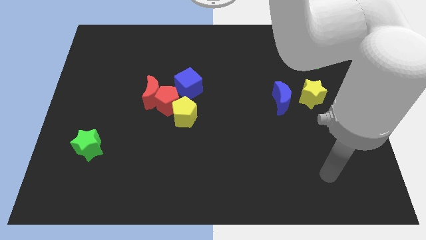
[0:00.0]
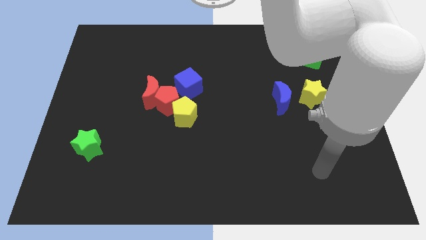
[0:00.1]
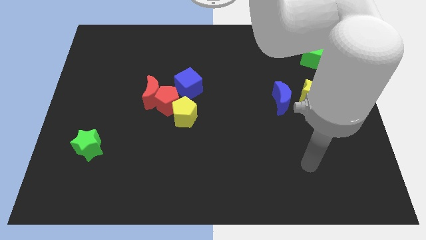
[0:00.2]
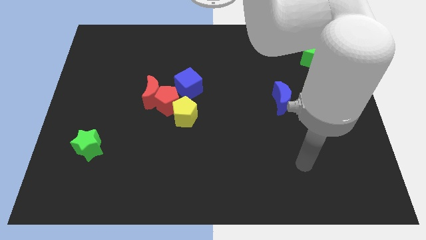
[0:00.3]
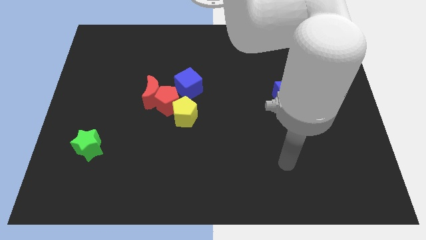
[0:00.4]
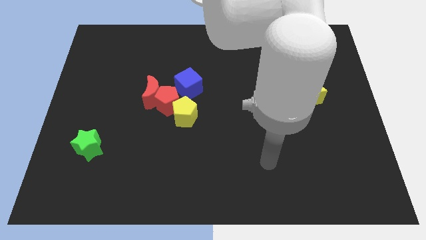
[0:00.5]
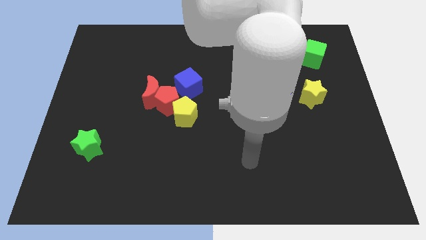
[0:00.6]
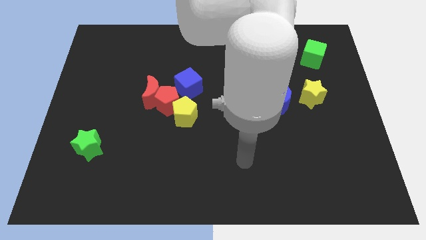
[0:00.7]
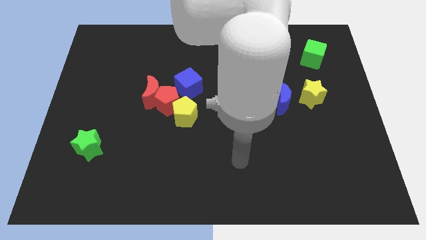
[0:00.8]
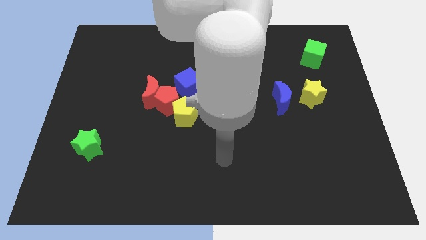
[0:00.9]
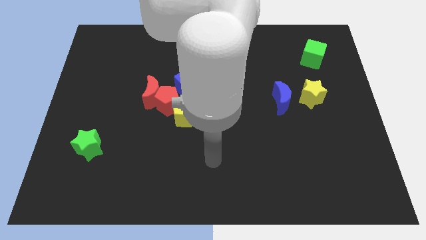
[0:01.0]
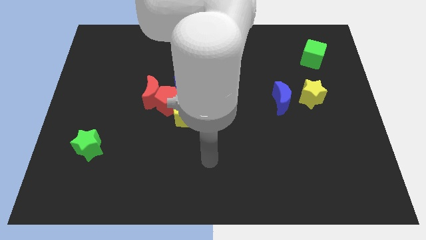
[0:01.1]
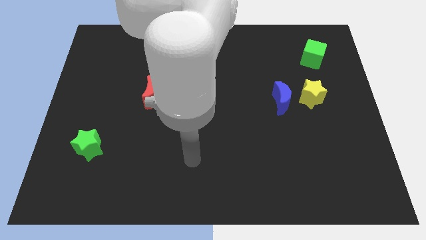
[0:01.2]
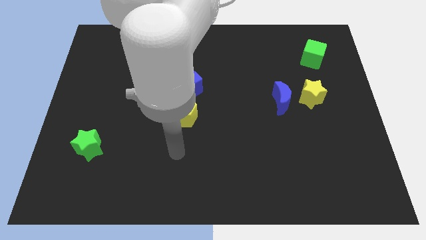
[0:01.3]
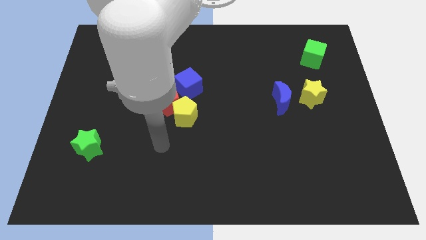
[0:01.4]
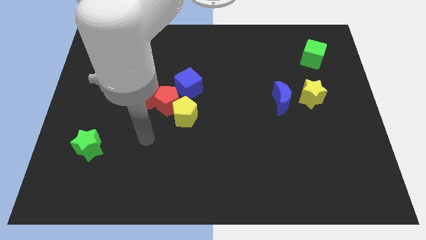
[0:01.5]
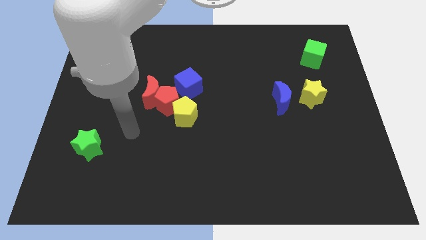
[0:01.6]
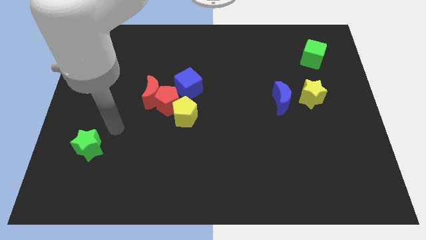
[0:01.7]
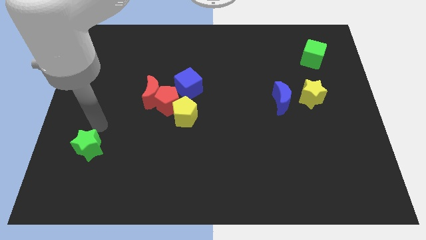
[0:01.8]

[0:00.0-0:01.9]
point your arm on top of green star

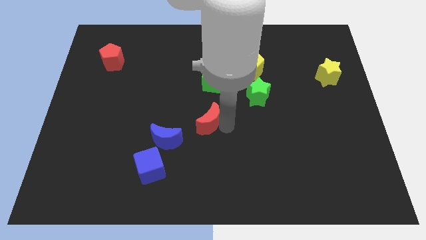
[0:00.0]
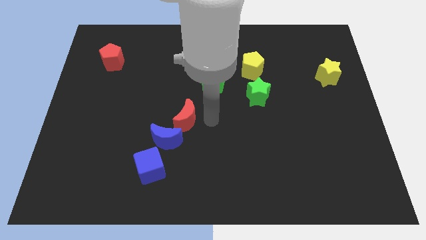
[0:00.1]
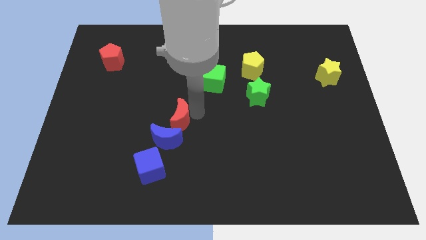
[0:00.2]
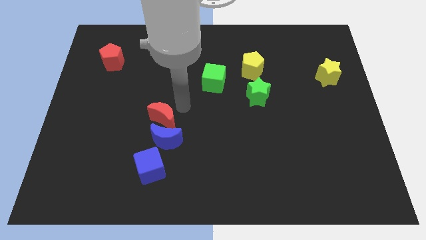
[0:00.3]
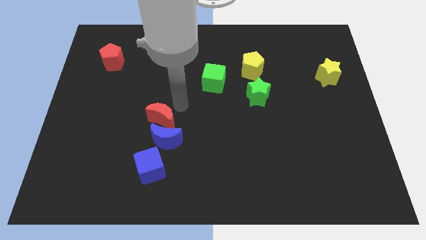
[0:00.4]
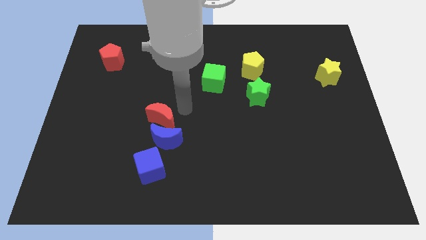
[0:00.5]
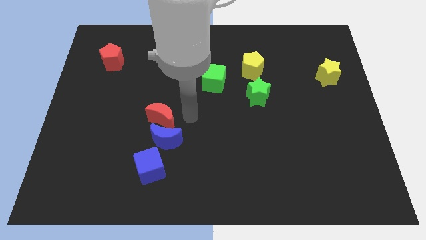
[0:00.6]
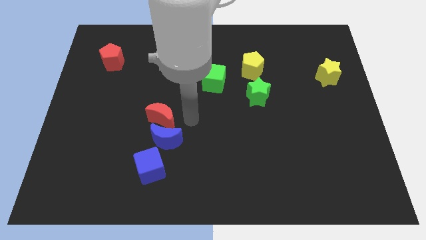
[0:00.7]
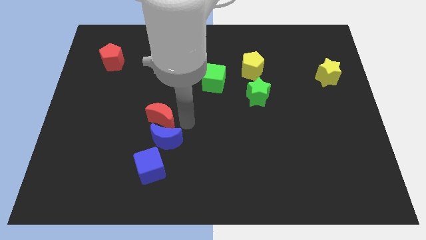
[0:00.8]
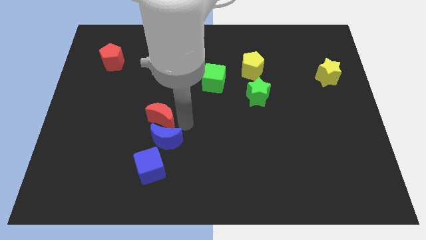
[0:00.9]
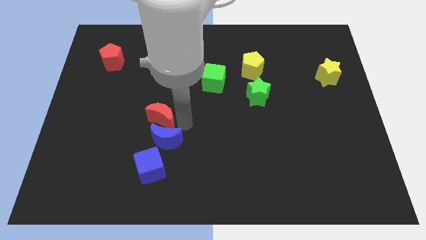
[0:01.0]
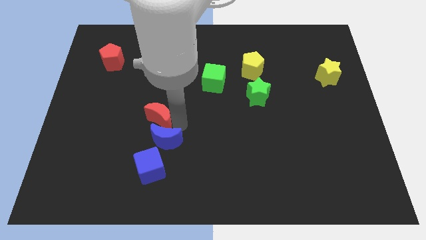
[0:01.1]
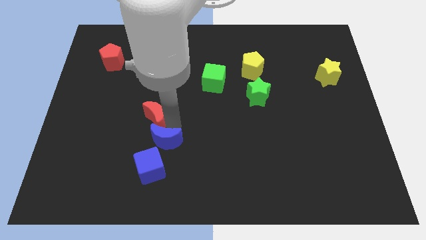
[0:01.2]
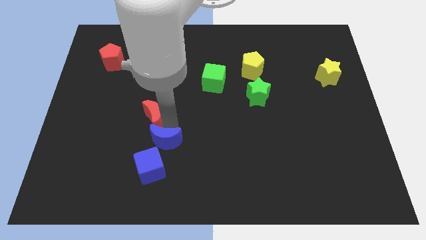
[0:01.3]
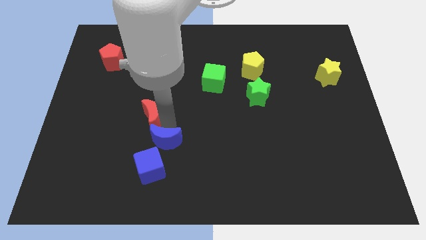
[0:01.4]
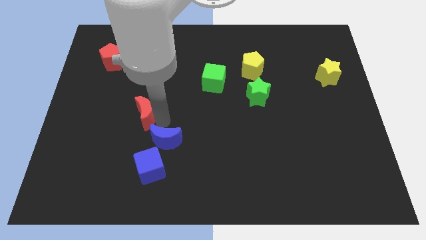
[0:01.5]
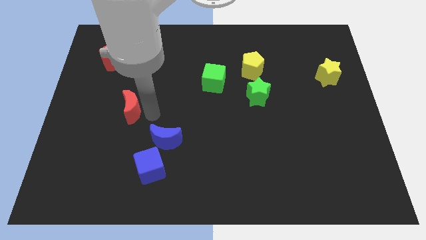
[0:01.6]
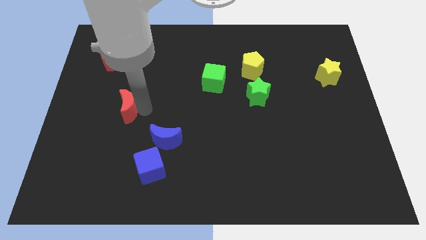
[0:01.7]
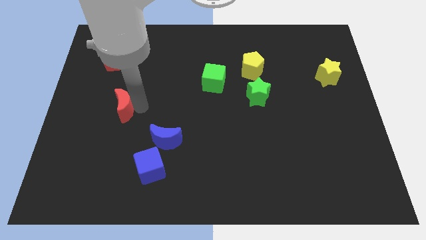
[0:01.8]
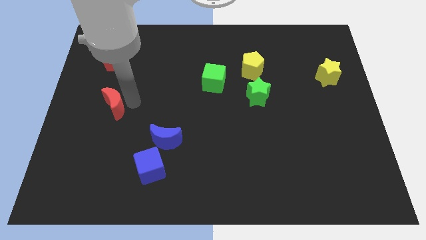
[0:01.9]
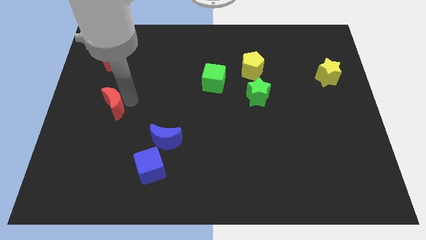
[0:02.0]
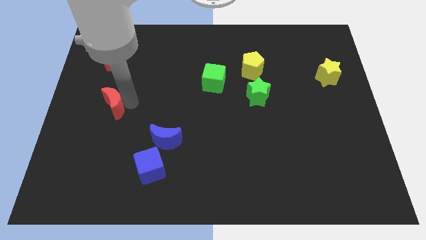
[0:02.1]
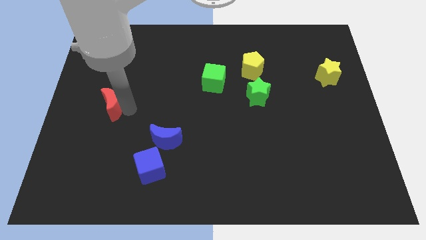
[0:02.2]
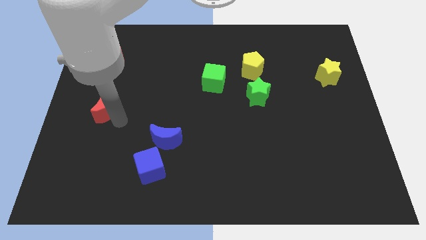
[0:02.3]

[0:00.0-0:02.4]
move the crescent to the left

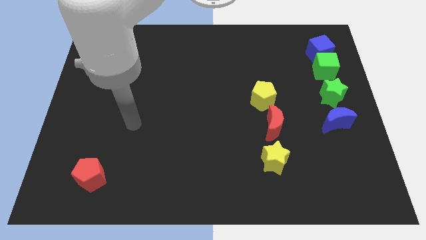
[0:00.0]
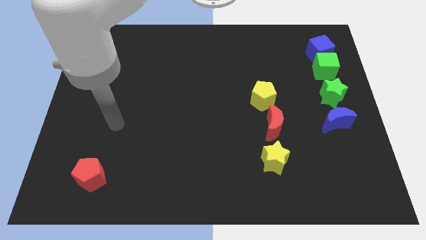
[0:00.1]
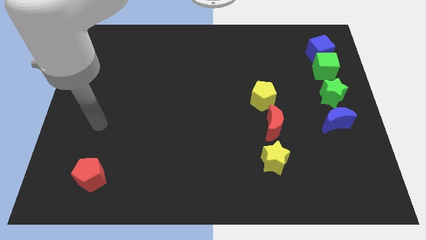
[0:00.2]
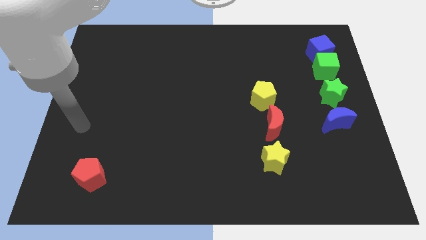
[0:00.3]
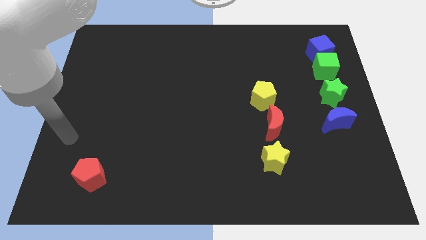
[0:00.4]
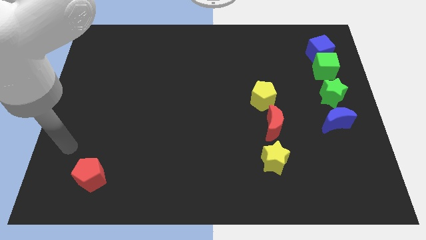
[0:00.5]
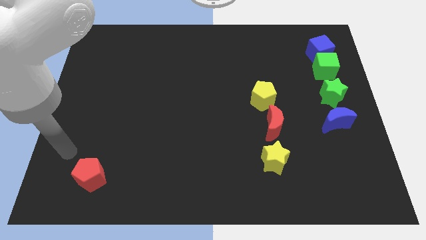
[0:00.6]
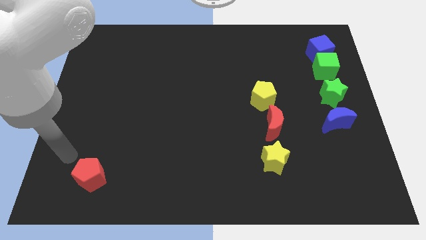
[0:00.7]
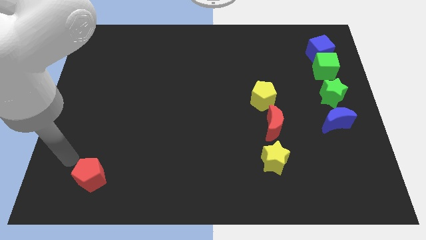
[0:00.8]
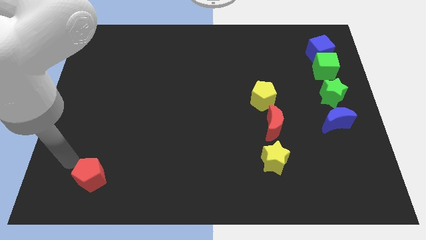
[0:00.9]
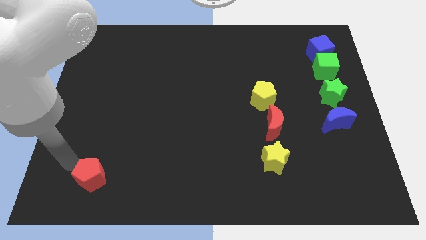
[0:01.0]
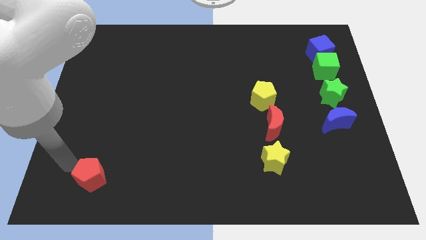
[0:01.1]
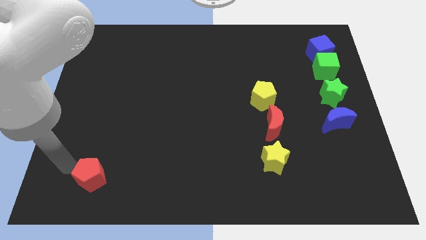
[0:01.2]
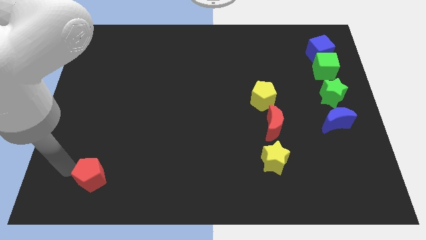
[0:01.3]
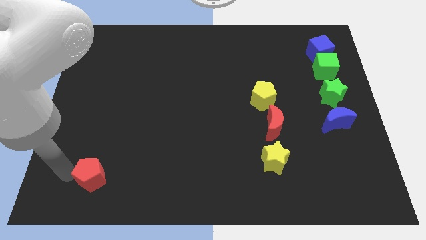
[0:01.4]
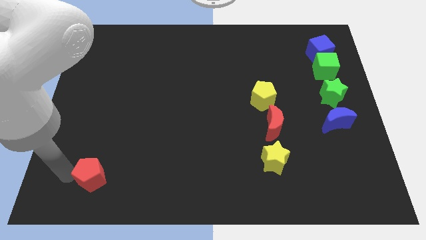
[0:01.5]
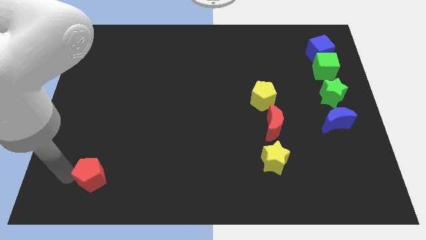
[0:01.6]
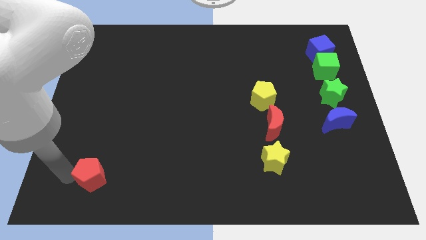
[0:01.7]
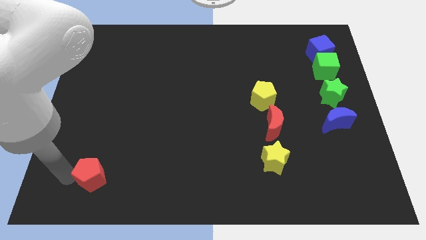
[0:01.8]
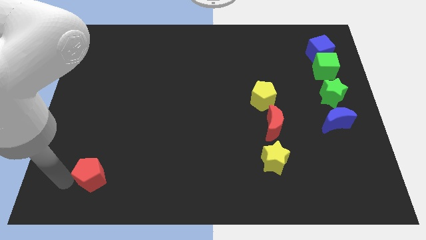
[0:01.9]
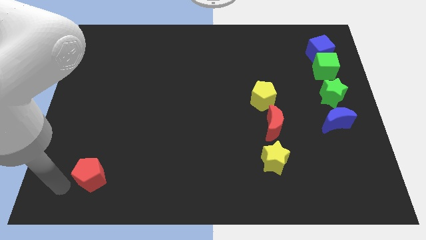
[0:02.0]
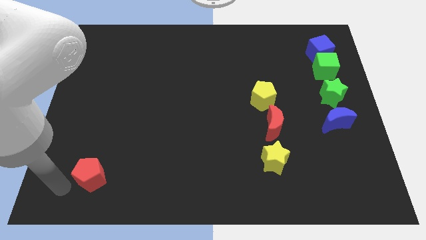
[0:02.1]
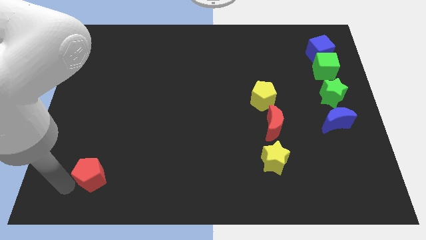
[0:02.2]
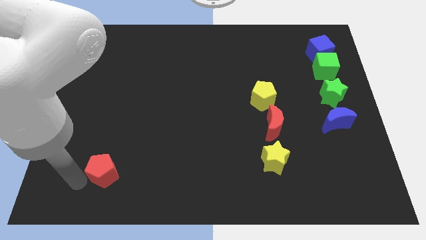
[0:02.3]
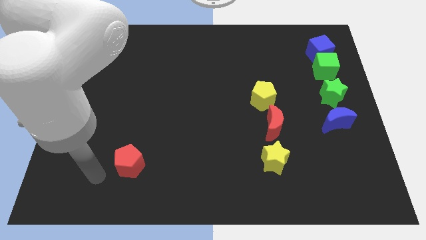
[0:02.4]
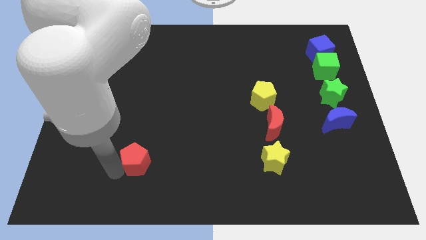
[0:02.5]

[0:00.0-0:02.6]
move your arm into the red pentagon

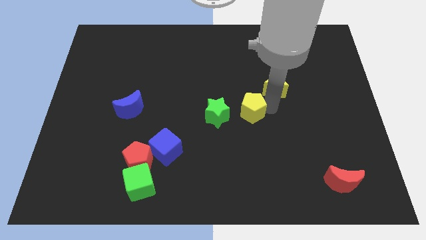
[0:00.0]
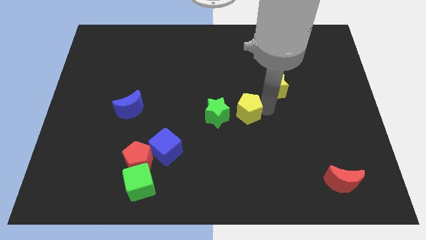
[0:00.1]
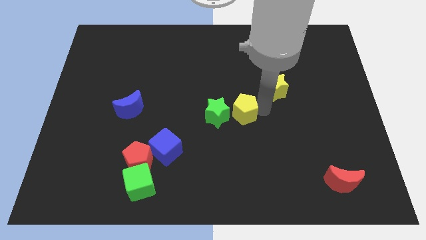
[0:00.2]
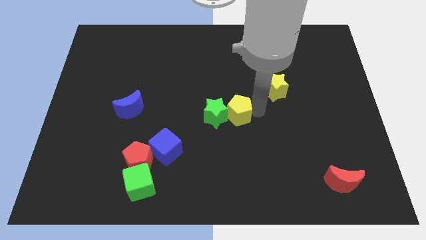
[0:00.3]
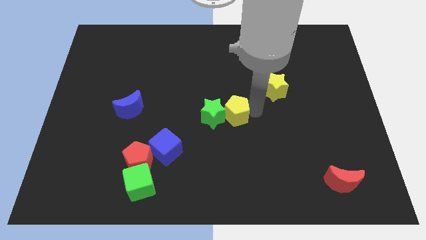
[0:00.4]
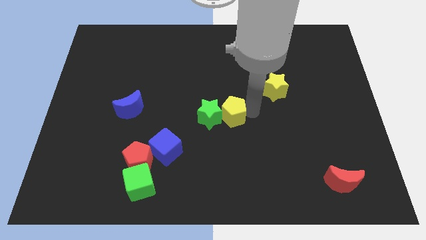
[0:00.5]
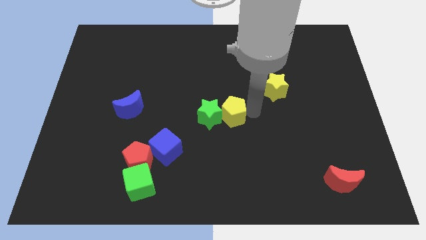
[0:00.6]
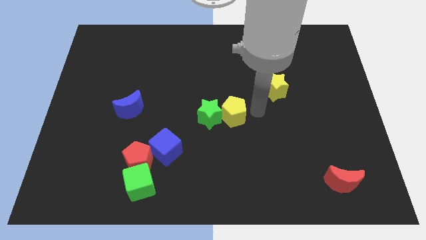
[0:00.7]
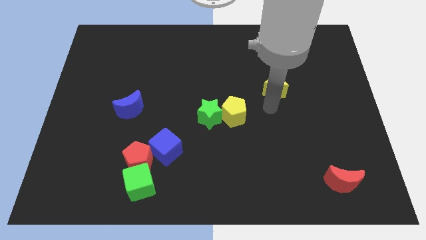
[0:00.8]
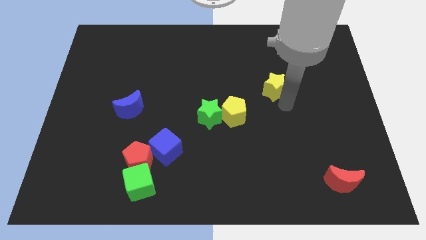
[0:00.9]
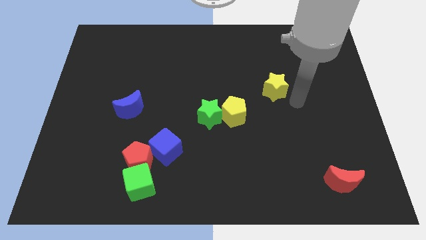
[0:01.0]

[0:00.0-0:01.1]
push the yellow pentagon into the green star

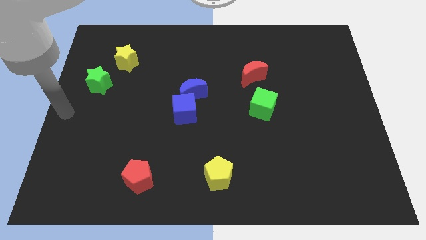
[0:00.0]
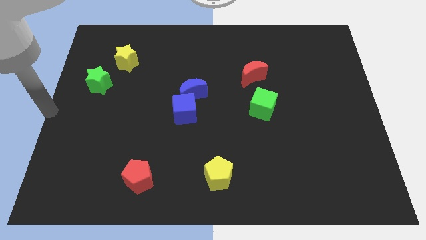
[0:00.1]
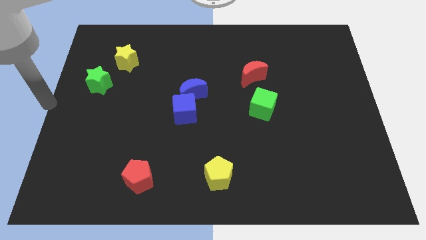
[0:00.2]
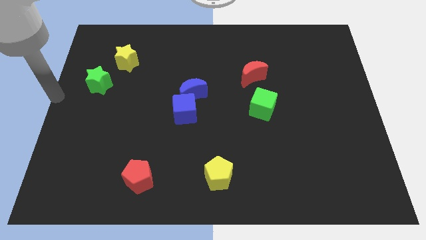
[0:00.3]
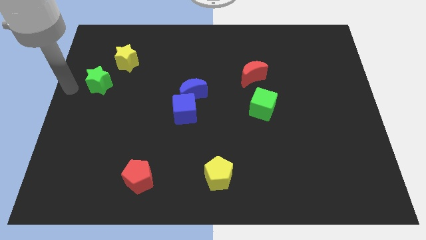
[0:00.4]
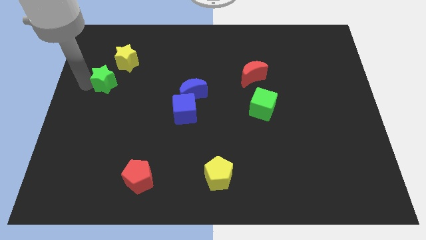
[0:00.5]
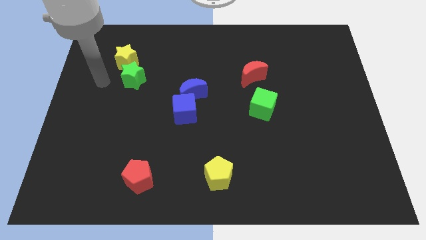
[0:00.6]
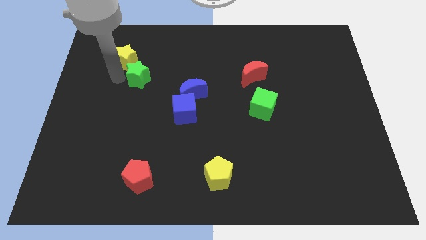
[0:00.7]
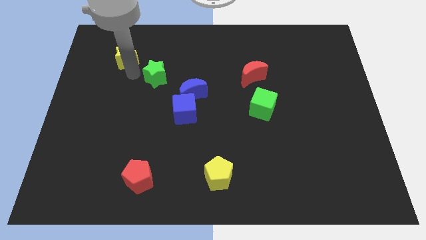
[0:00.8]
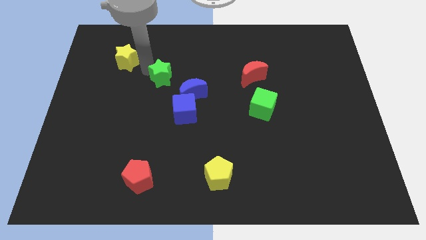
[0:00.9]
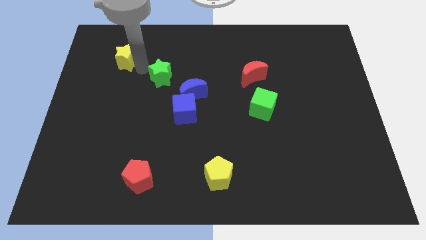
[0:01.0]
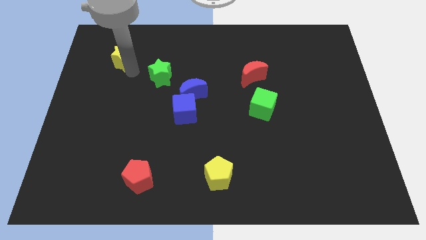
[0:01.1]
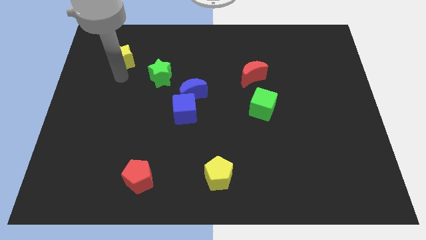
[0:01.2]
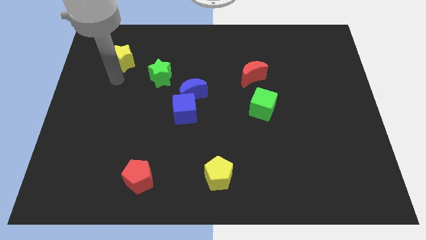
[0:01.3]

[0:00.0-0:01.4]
push the green star to the top left side of the blue moon
